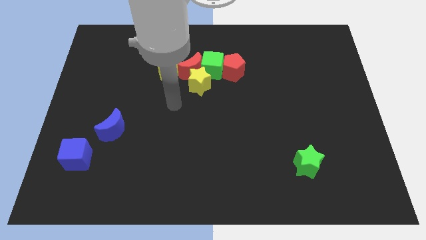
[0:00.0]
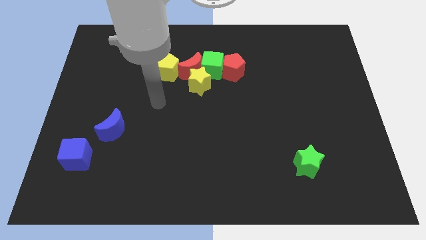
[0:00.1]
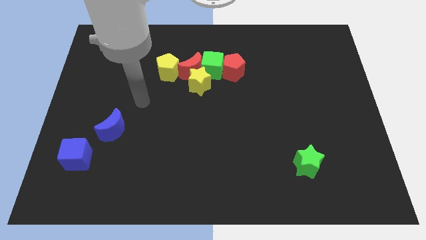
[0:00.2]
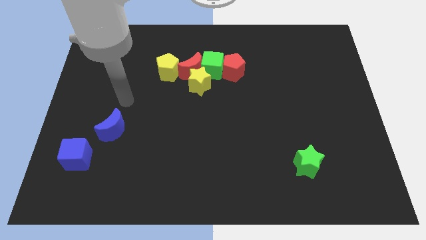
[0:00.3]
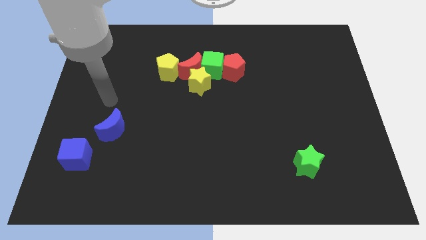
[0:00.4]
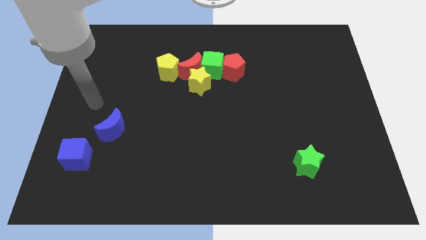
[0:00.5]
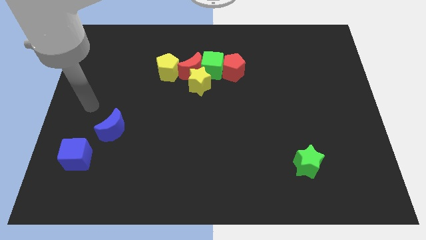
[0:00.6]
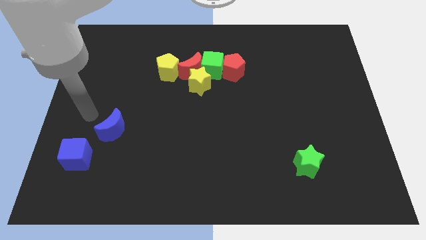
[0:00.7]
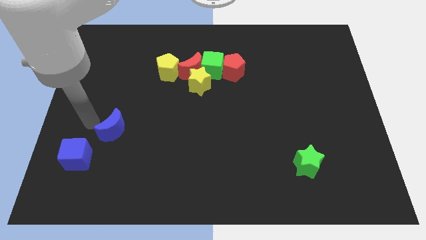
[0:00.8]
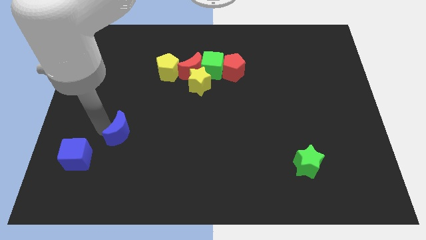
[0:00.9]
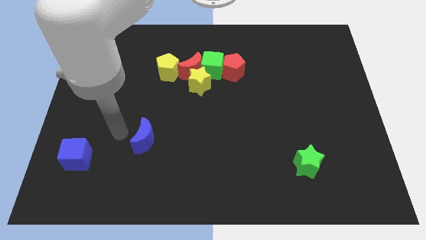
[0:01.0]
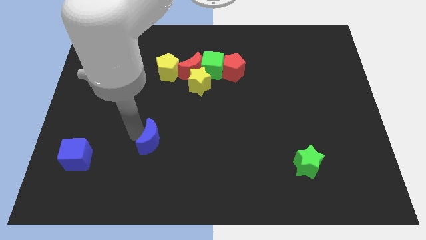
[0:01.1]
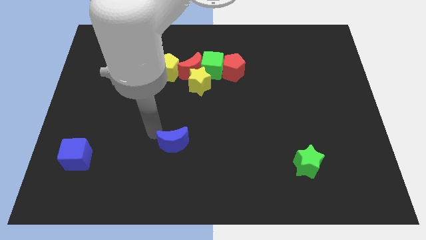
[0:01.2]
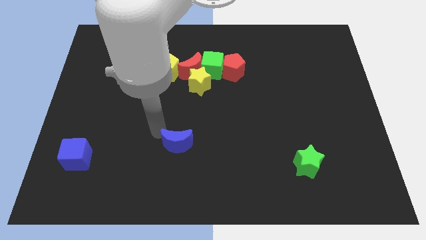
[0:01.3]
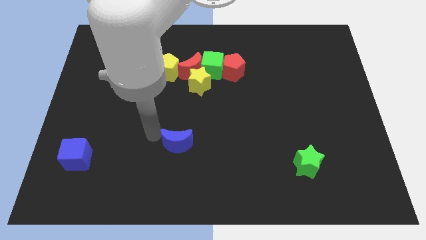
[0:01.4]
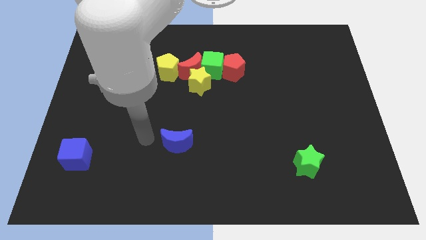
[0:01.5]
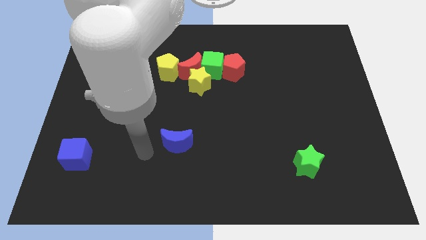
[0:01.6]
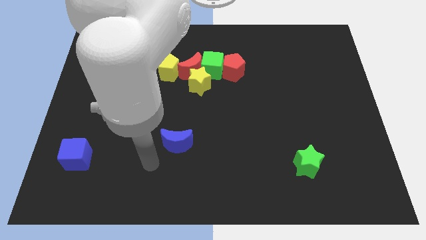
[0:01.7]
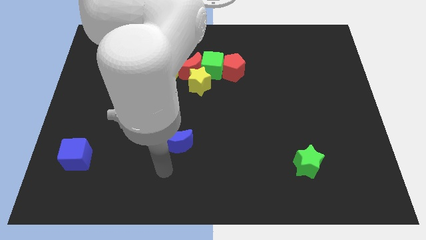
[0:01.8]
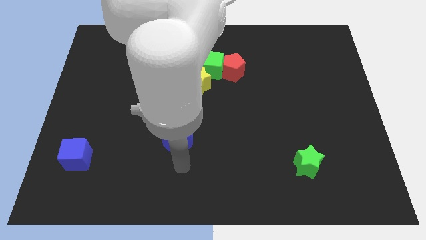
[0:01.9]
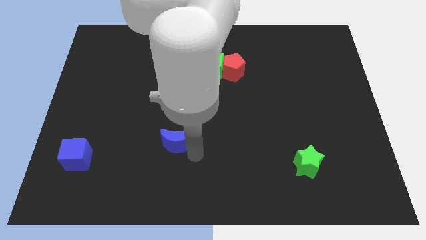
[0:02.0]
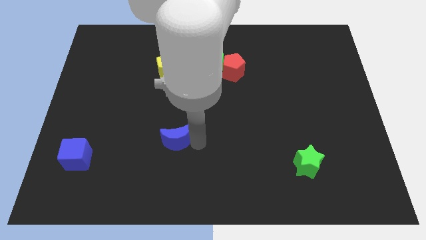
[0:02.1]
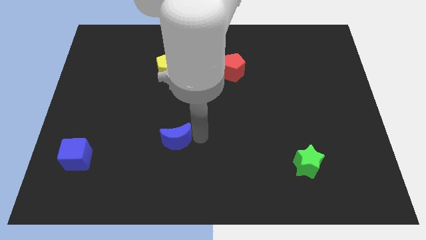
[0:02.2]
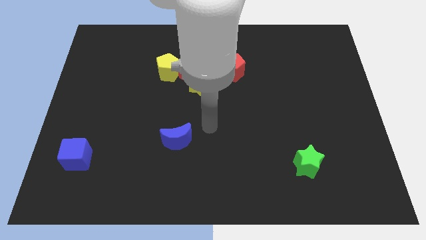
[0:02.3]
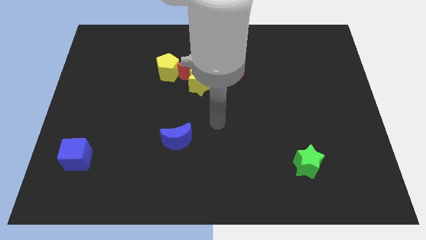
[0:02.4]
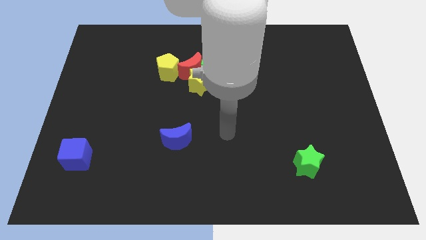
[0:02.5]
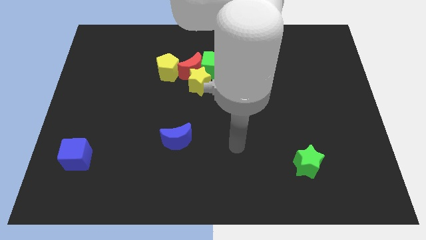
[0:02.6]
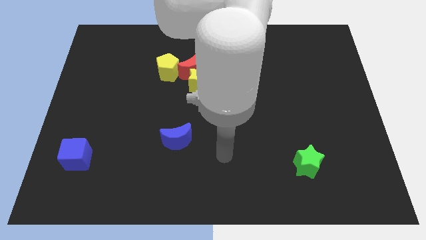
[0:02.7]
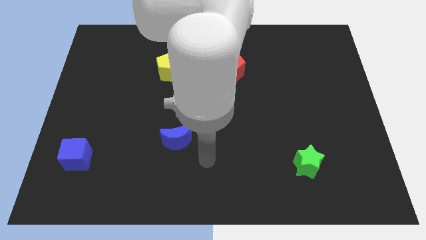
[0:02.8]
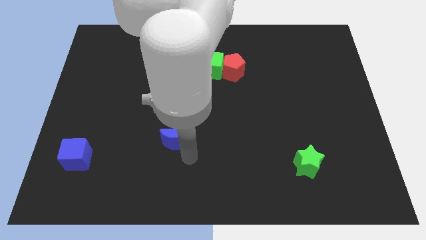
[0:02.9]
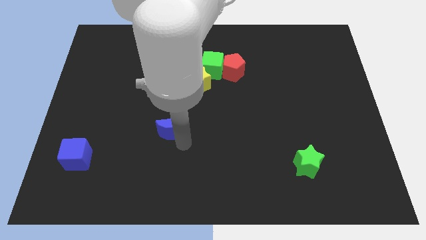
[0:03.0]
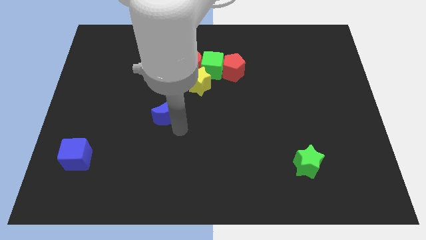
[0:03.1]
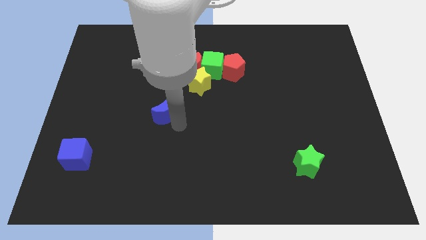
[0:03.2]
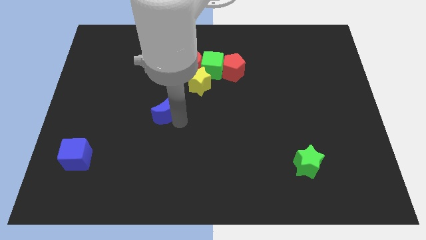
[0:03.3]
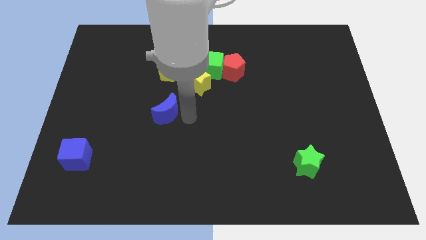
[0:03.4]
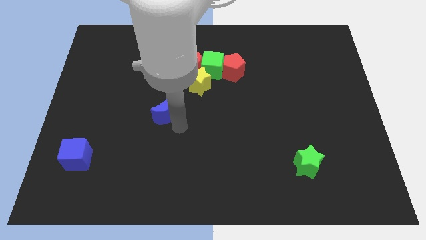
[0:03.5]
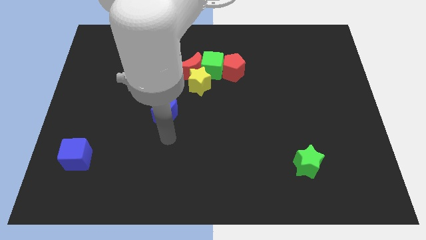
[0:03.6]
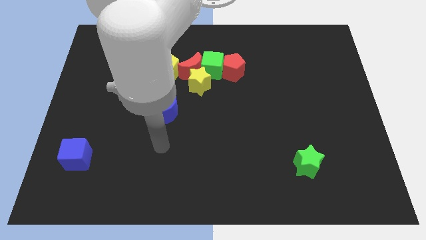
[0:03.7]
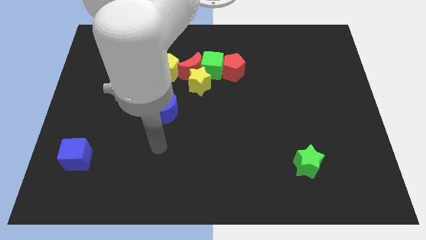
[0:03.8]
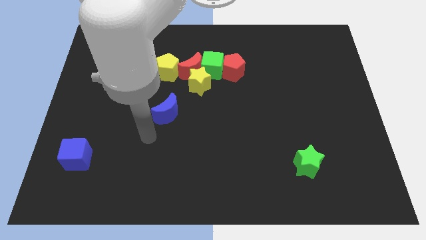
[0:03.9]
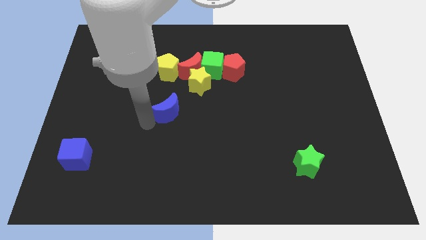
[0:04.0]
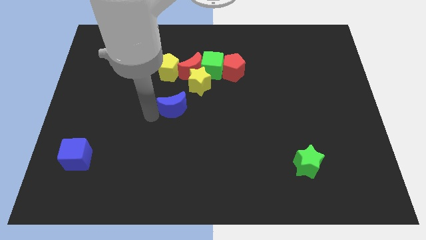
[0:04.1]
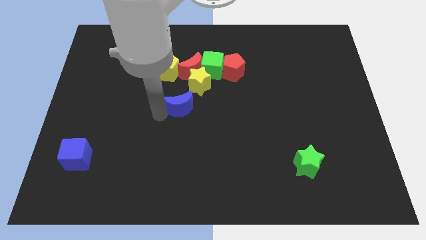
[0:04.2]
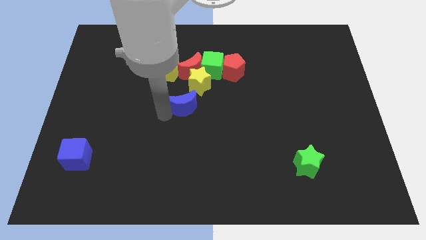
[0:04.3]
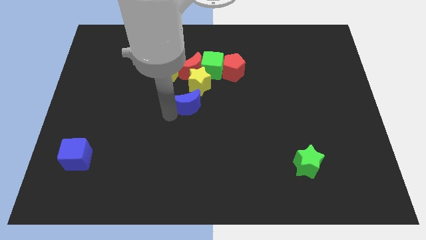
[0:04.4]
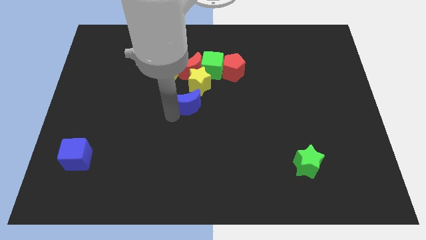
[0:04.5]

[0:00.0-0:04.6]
move the blue crescent towards the bottom side of the yellow star

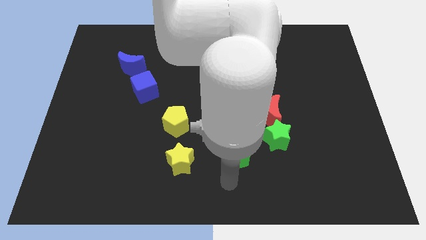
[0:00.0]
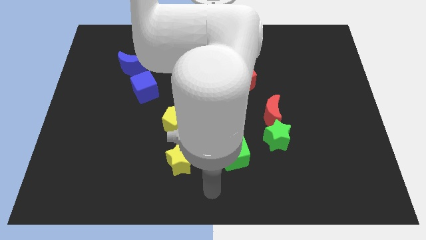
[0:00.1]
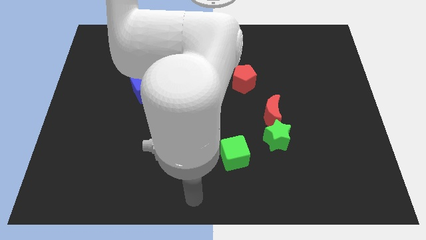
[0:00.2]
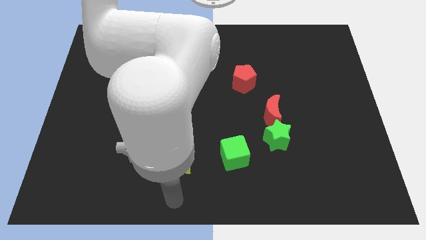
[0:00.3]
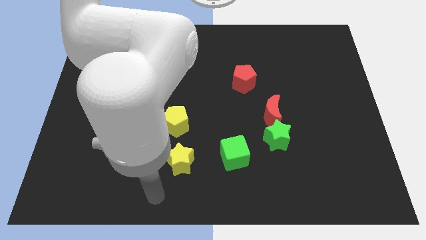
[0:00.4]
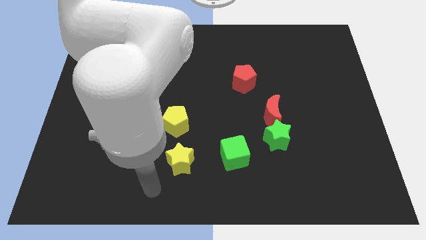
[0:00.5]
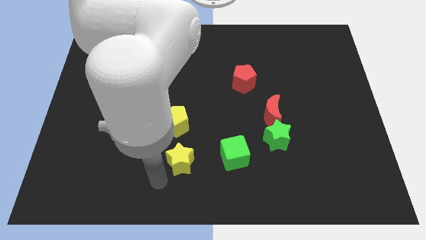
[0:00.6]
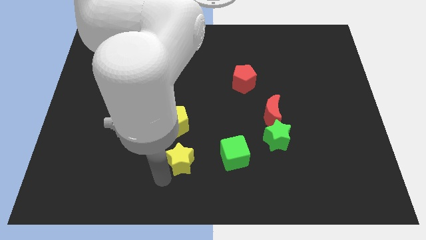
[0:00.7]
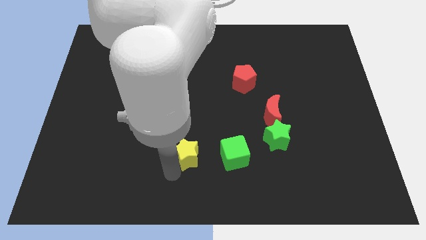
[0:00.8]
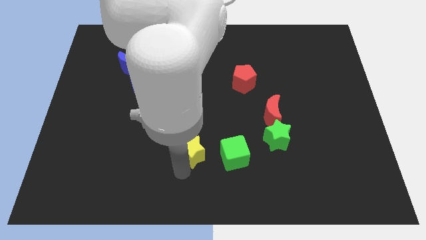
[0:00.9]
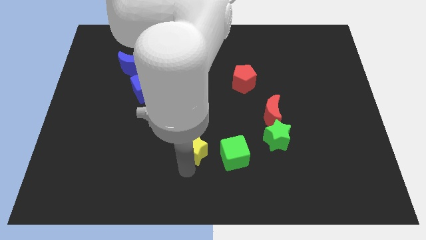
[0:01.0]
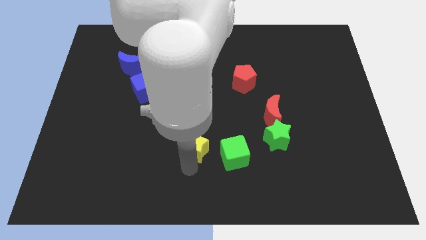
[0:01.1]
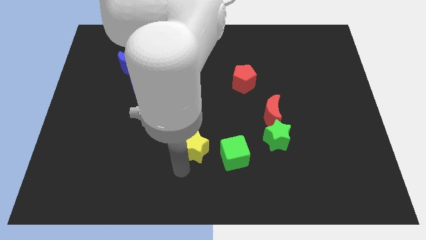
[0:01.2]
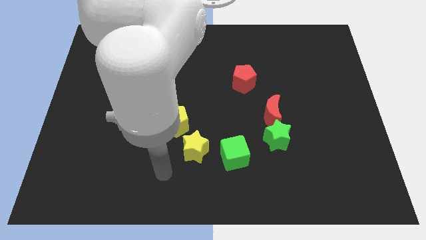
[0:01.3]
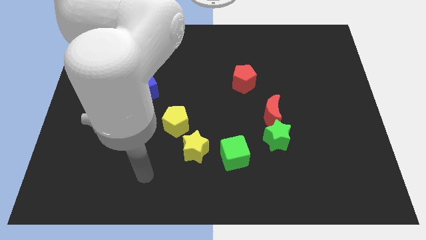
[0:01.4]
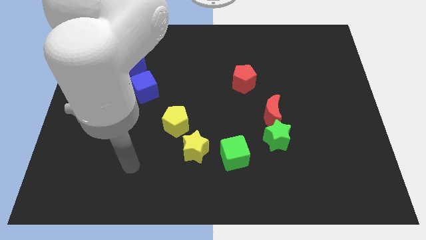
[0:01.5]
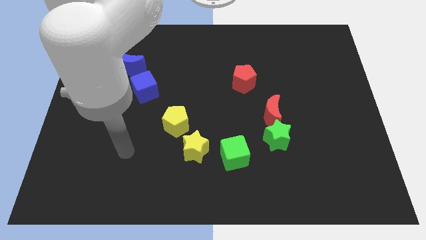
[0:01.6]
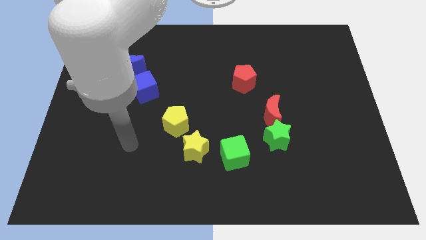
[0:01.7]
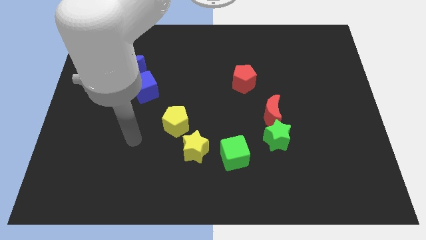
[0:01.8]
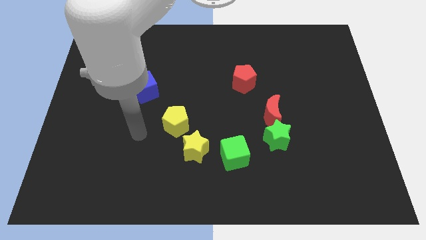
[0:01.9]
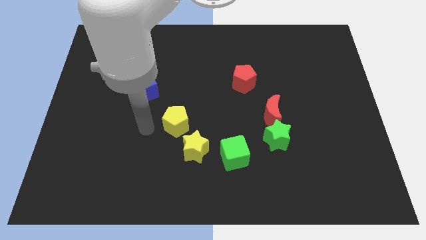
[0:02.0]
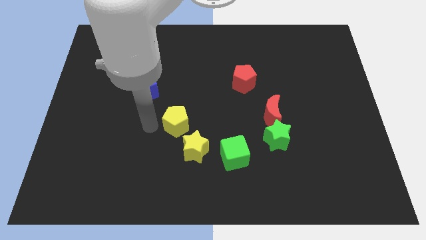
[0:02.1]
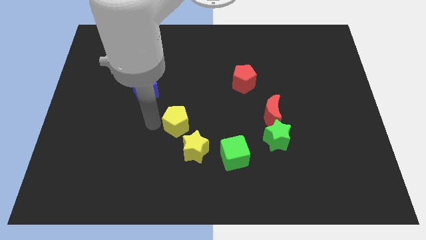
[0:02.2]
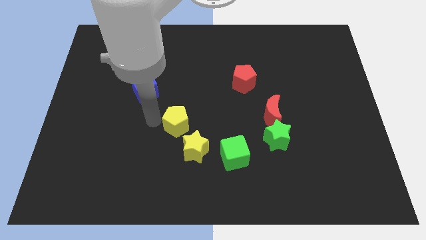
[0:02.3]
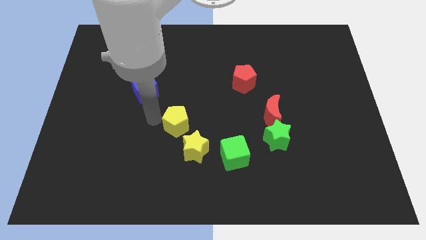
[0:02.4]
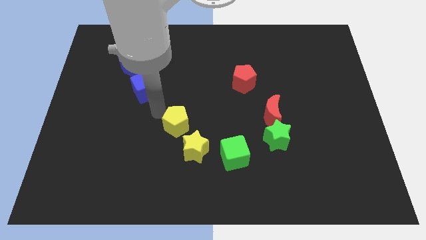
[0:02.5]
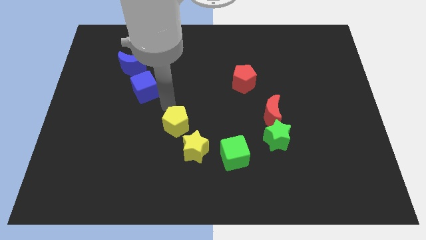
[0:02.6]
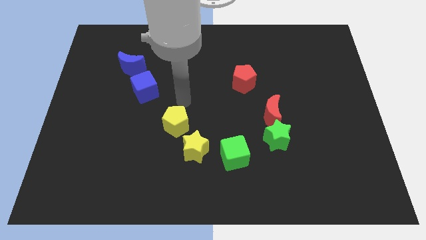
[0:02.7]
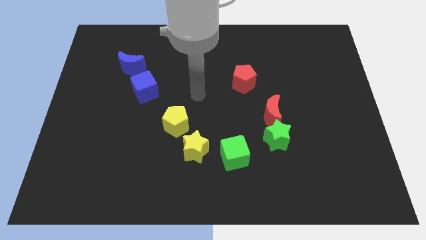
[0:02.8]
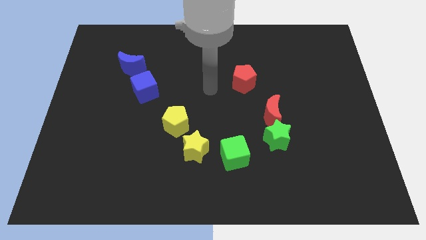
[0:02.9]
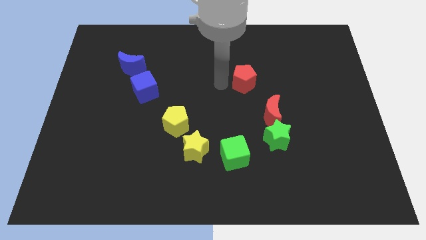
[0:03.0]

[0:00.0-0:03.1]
push yellow star slightly upwards

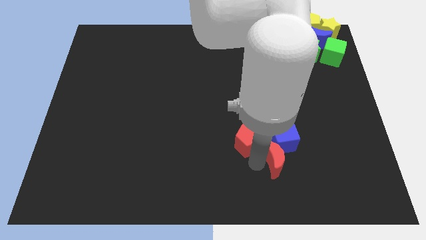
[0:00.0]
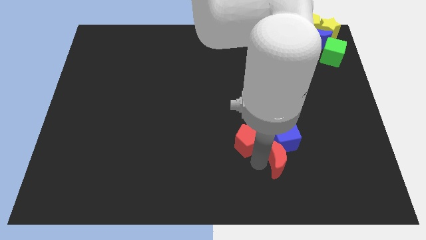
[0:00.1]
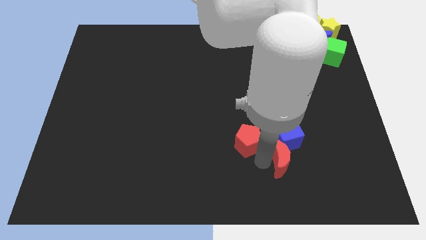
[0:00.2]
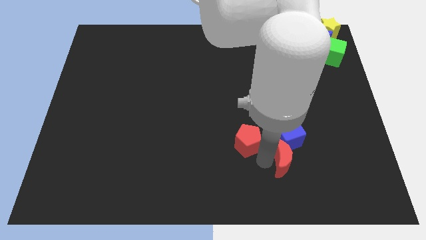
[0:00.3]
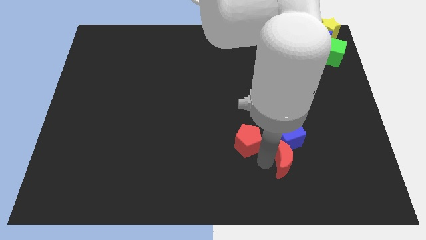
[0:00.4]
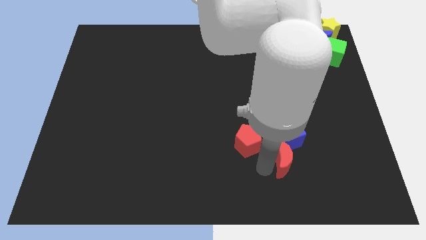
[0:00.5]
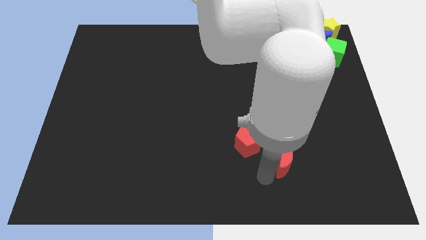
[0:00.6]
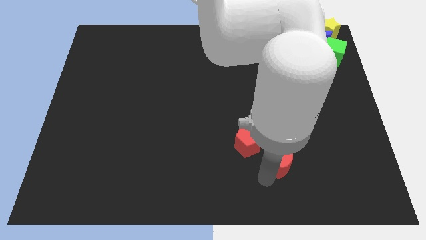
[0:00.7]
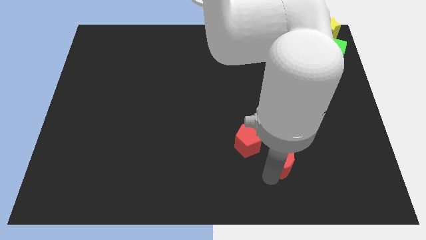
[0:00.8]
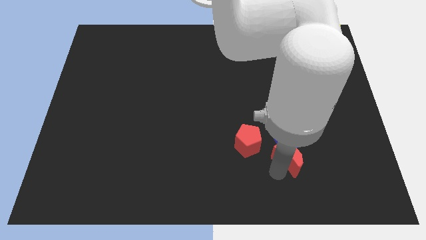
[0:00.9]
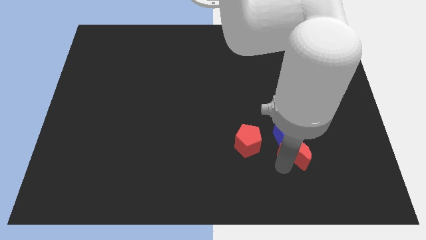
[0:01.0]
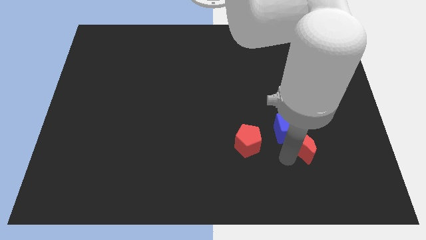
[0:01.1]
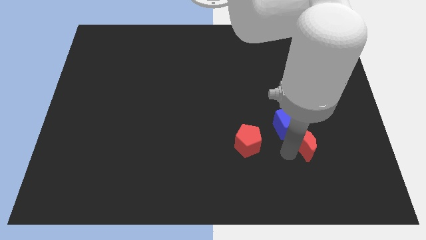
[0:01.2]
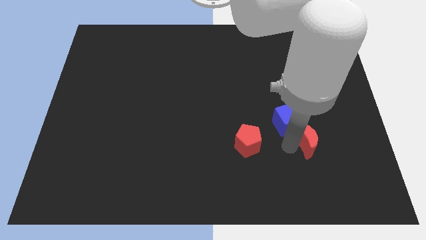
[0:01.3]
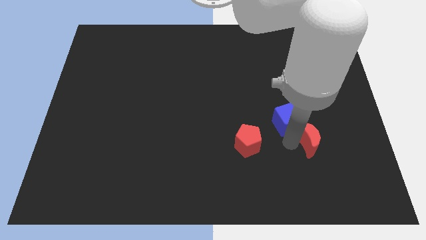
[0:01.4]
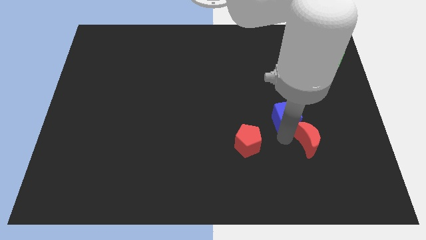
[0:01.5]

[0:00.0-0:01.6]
slide the red moon horizontally to the right side of the red pentagon
